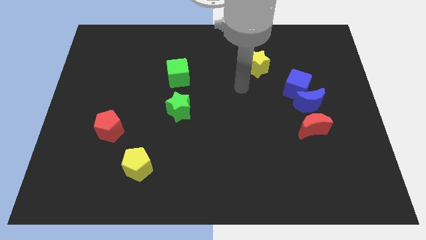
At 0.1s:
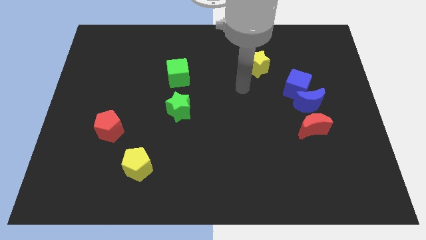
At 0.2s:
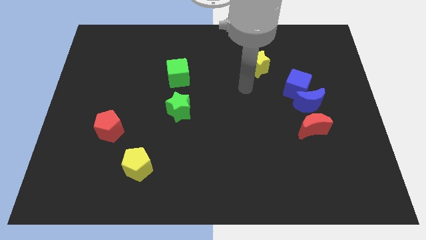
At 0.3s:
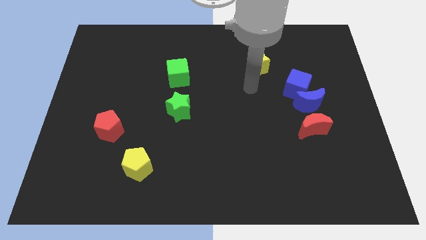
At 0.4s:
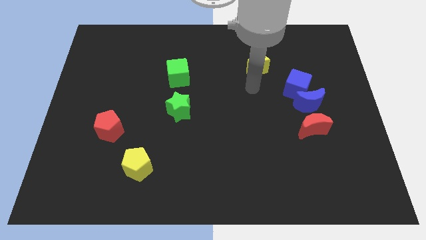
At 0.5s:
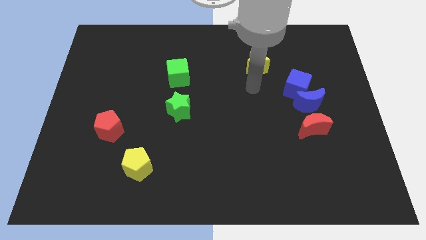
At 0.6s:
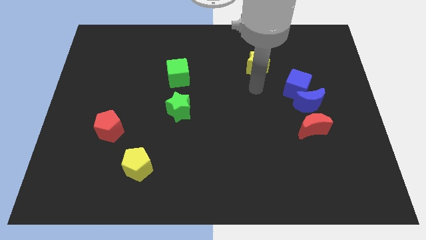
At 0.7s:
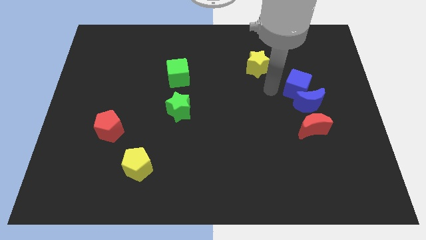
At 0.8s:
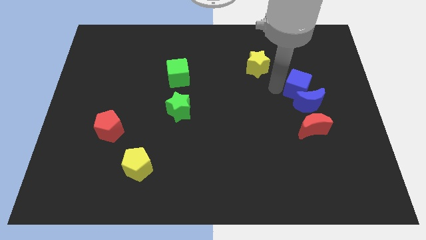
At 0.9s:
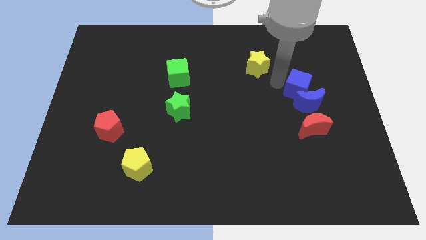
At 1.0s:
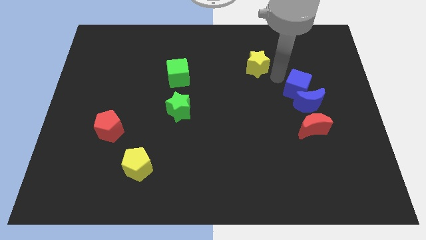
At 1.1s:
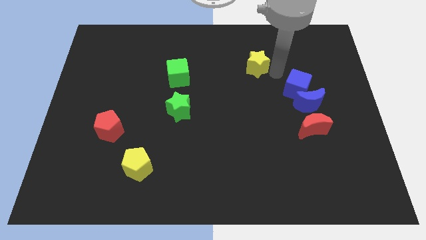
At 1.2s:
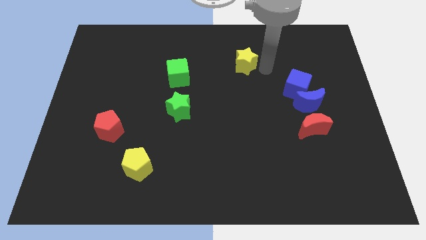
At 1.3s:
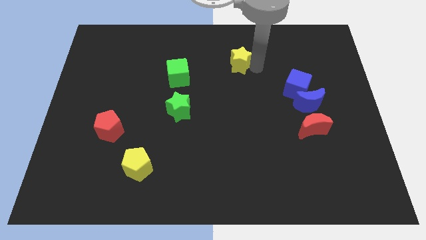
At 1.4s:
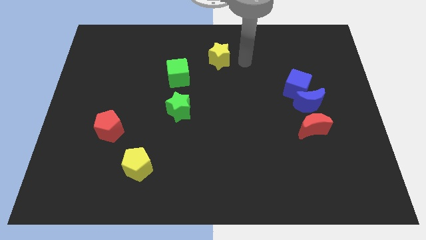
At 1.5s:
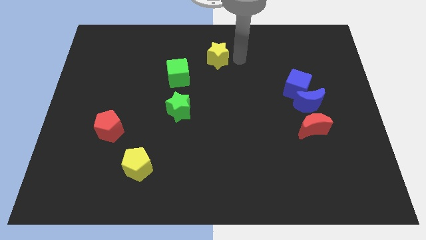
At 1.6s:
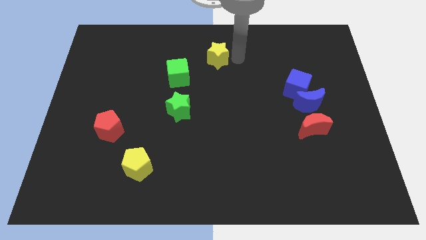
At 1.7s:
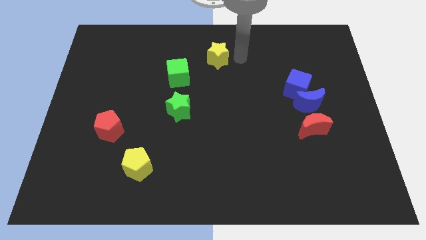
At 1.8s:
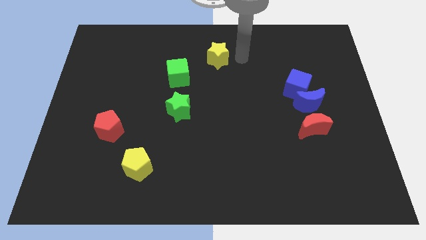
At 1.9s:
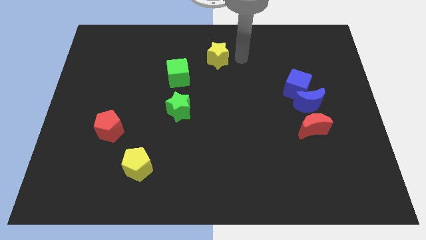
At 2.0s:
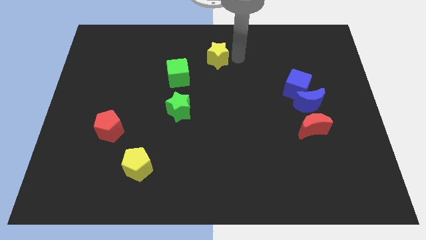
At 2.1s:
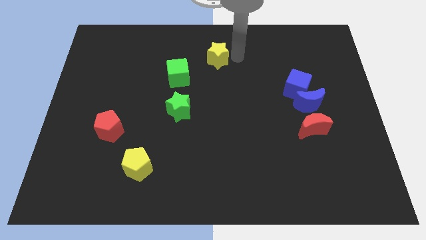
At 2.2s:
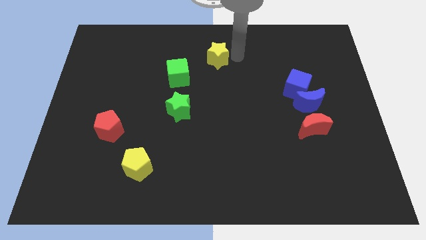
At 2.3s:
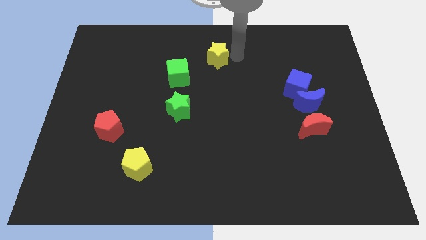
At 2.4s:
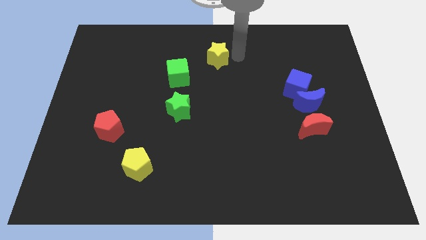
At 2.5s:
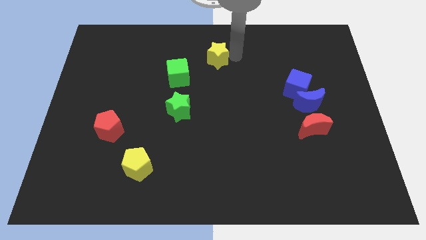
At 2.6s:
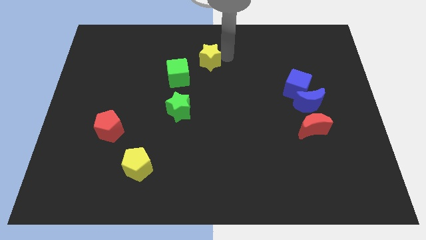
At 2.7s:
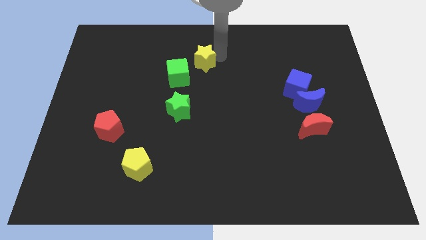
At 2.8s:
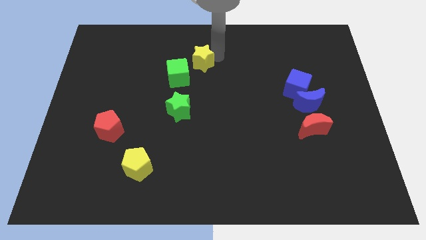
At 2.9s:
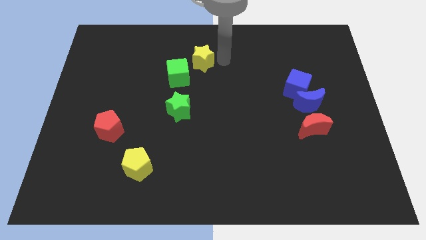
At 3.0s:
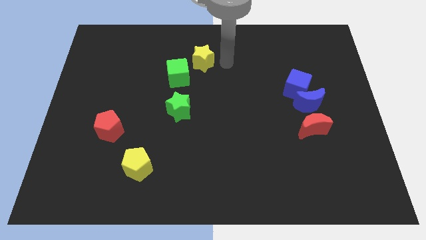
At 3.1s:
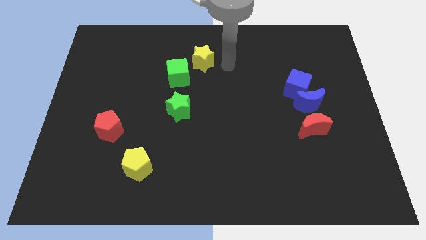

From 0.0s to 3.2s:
move the yellow star to the top right to the green cube

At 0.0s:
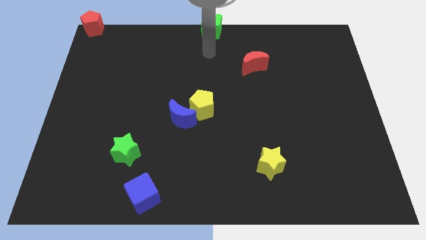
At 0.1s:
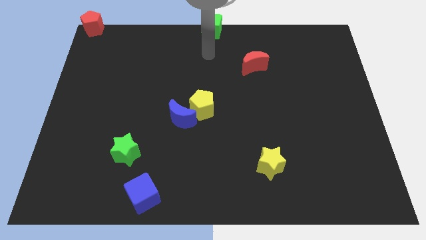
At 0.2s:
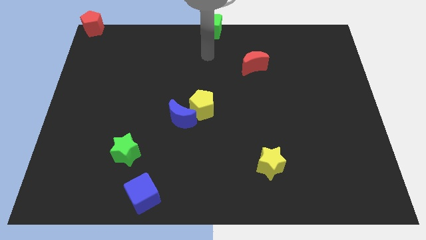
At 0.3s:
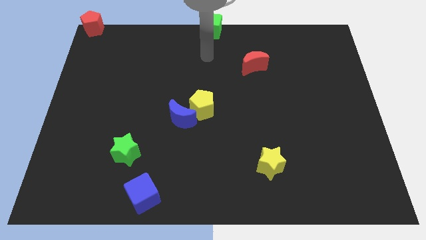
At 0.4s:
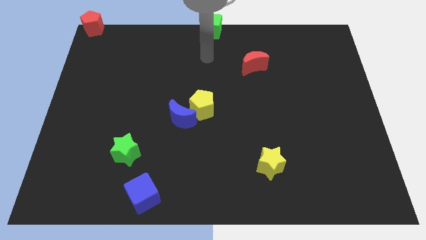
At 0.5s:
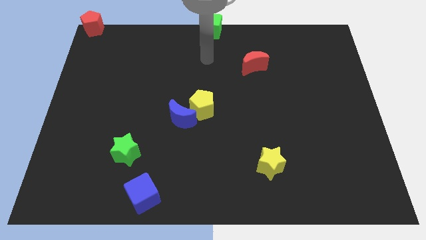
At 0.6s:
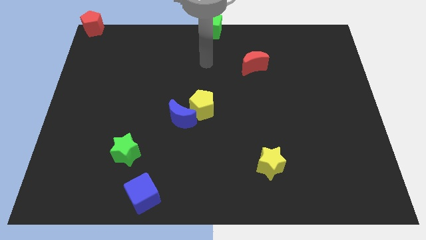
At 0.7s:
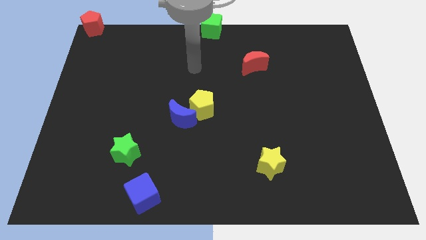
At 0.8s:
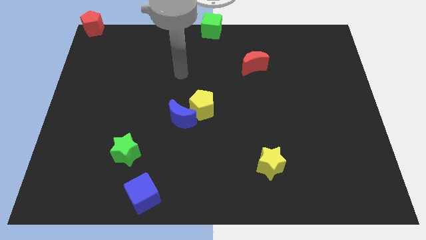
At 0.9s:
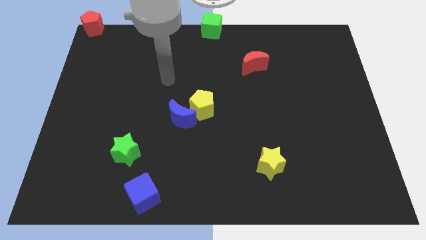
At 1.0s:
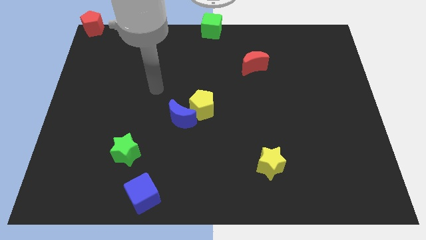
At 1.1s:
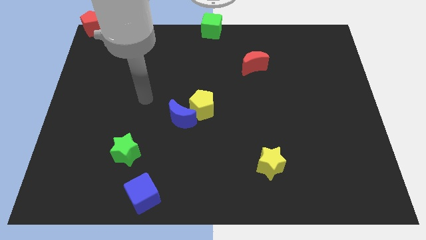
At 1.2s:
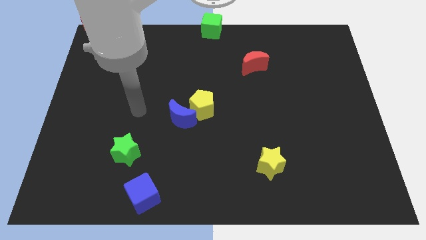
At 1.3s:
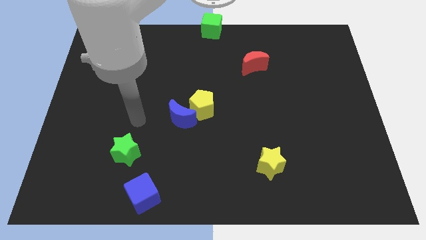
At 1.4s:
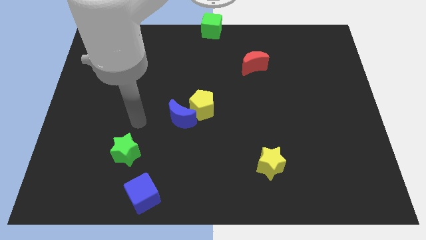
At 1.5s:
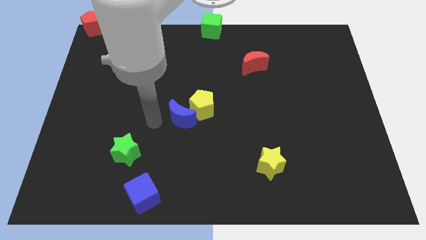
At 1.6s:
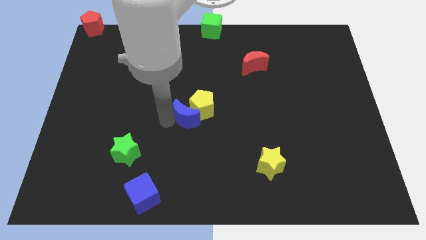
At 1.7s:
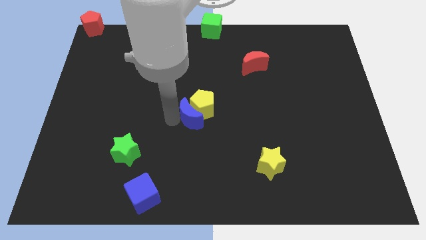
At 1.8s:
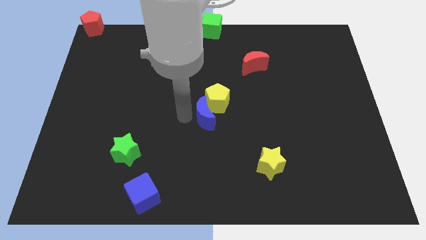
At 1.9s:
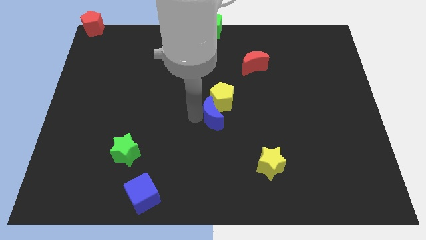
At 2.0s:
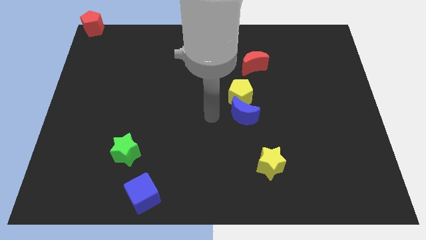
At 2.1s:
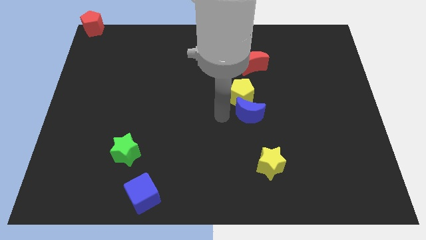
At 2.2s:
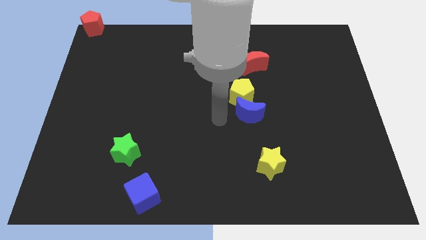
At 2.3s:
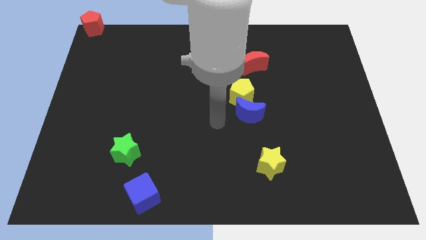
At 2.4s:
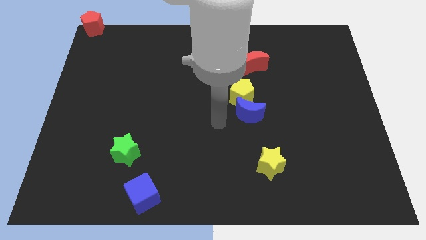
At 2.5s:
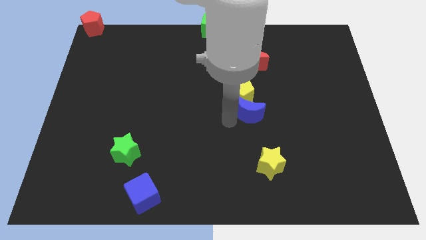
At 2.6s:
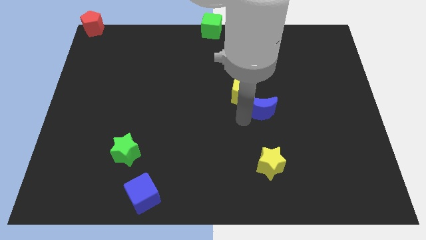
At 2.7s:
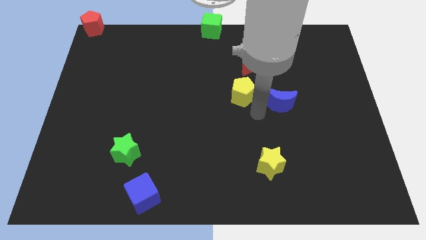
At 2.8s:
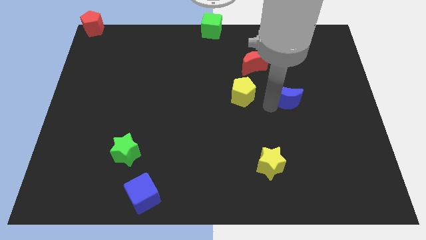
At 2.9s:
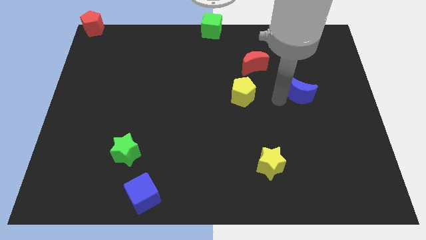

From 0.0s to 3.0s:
push the blue crescent to the right of the yellow pentagon

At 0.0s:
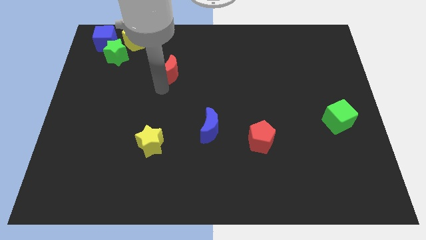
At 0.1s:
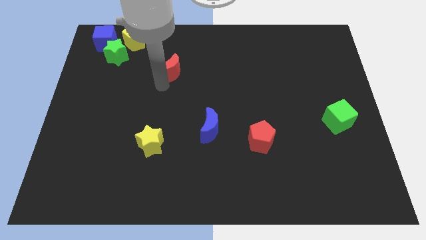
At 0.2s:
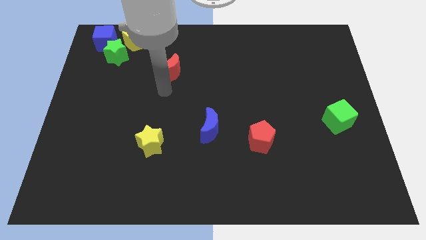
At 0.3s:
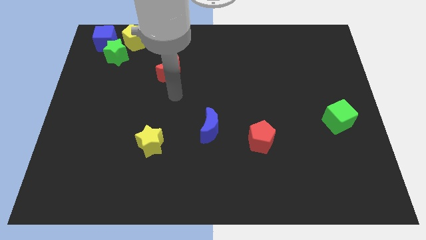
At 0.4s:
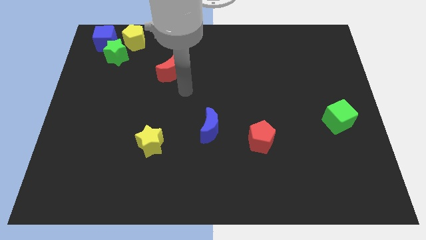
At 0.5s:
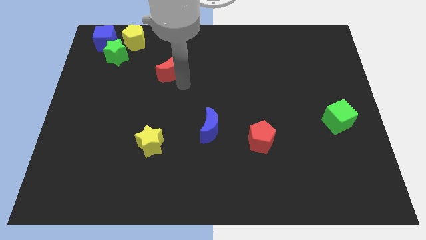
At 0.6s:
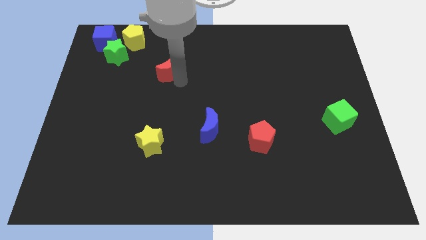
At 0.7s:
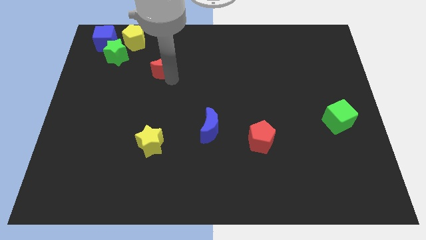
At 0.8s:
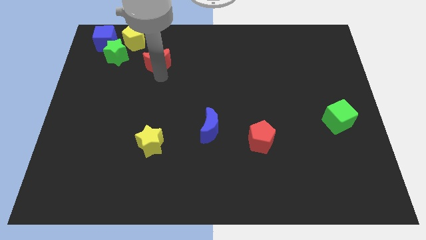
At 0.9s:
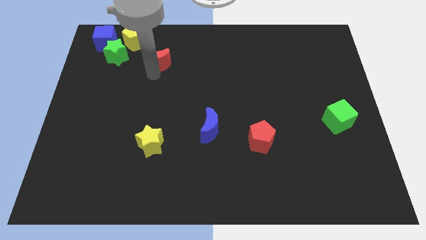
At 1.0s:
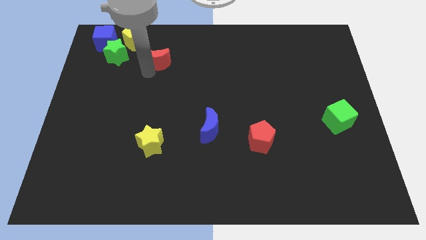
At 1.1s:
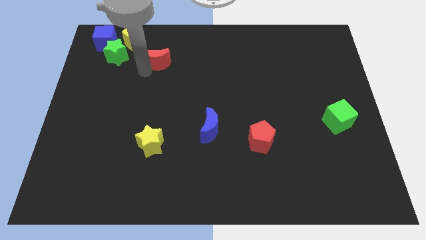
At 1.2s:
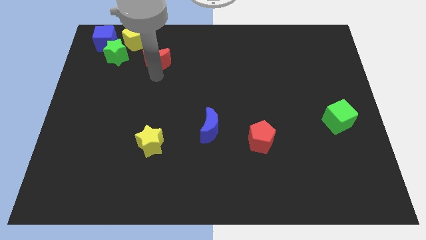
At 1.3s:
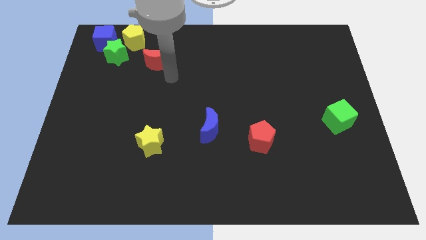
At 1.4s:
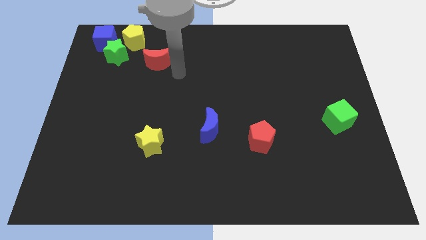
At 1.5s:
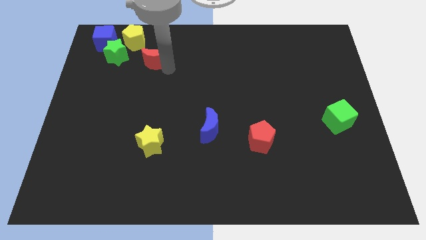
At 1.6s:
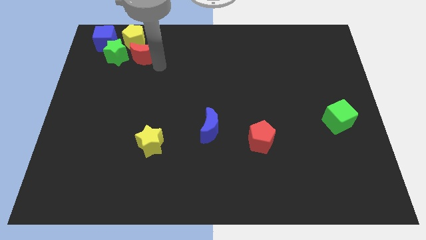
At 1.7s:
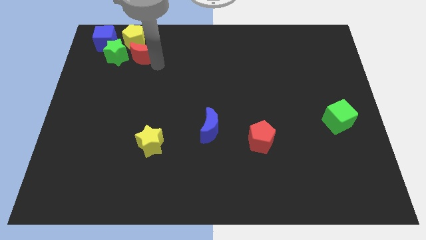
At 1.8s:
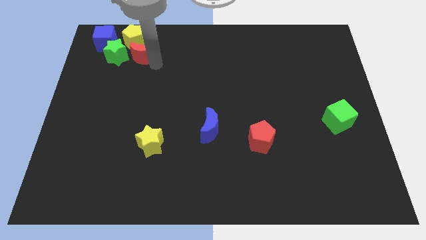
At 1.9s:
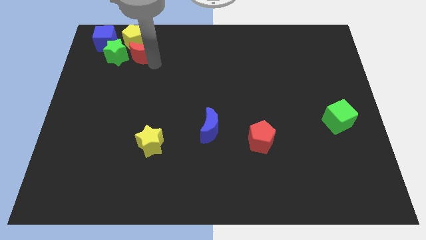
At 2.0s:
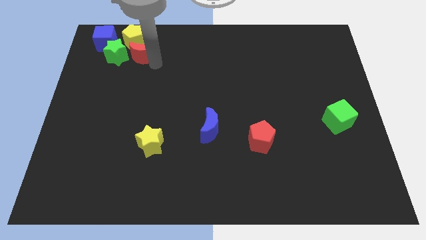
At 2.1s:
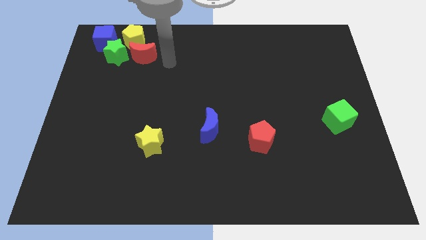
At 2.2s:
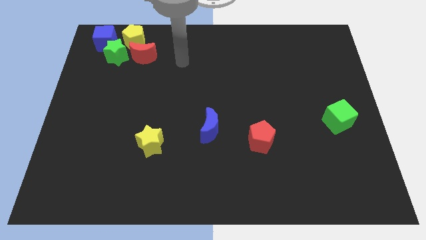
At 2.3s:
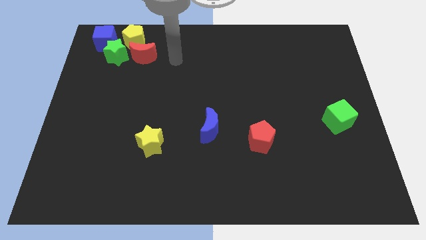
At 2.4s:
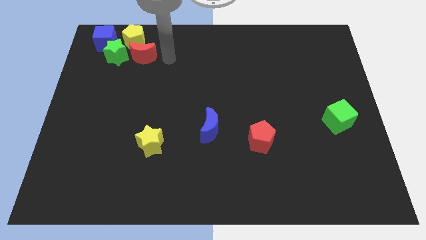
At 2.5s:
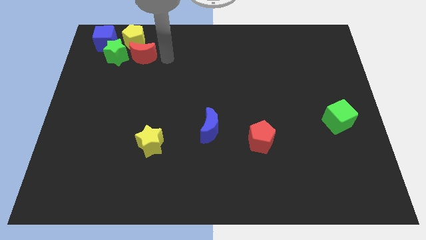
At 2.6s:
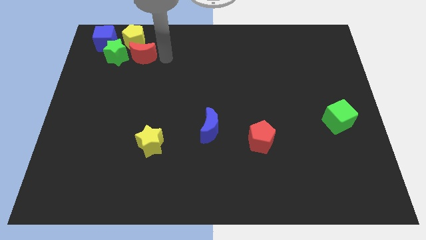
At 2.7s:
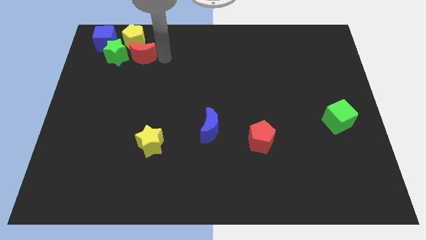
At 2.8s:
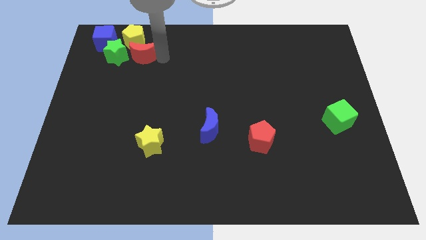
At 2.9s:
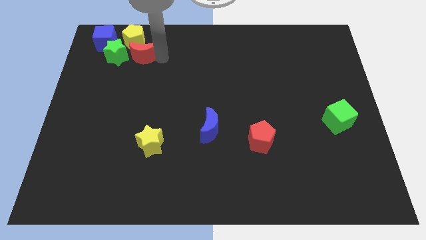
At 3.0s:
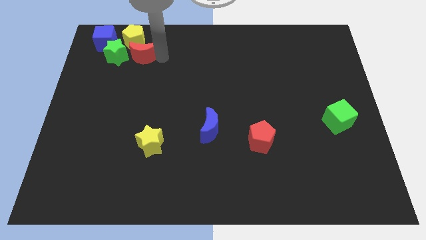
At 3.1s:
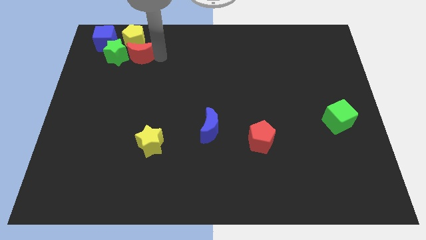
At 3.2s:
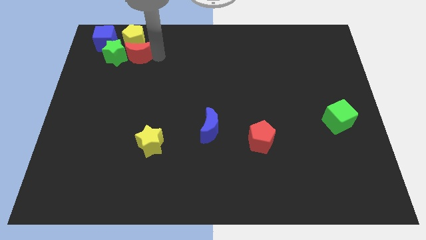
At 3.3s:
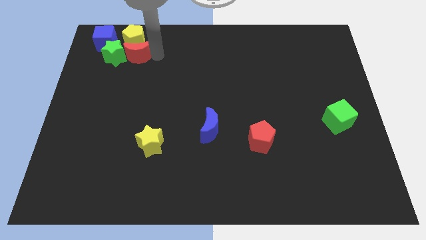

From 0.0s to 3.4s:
put the red moon below the yellow pentagon
